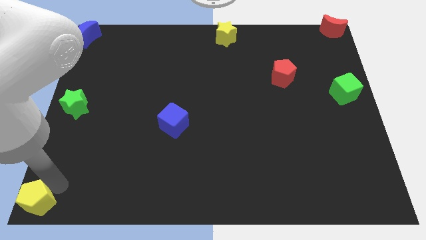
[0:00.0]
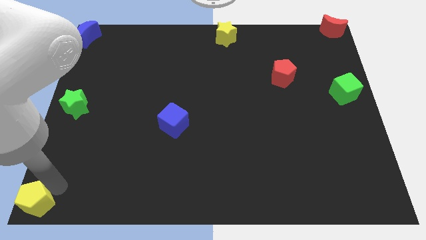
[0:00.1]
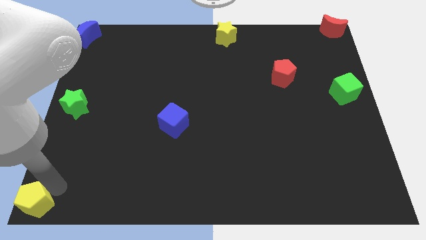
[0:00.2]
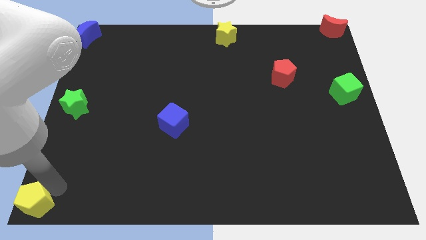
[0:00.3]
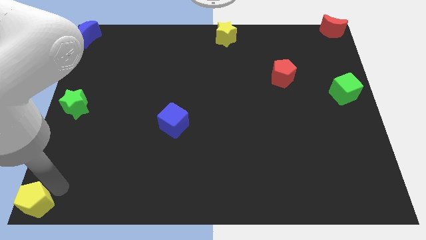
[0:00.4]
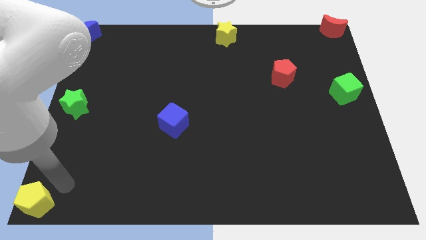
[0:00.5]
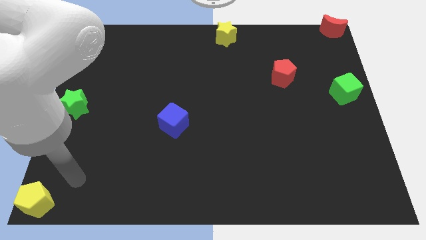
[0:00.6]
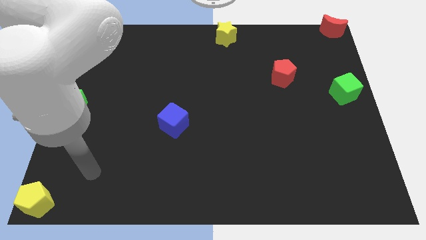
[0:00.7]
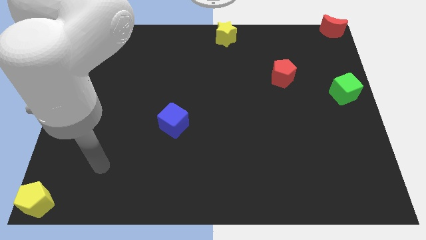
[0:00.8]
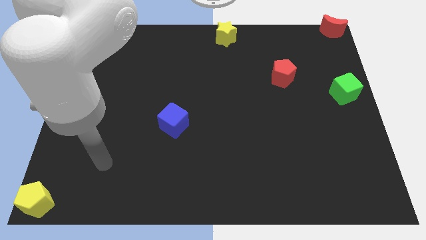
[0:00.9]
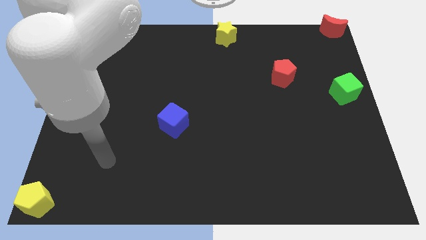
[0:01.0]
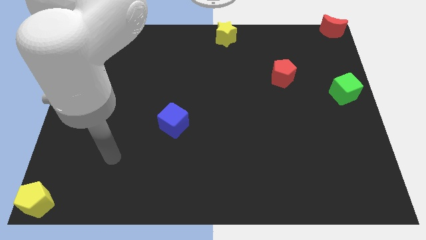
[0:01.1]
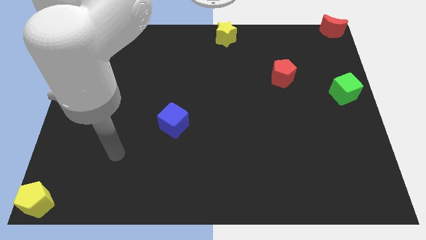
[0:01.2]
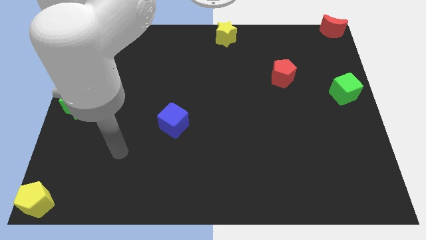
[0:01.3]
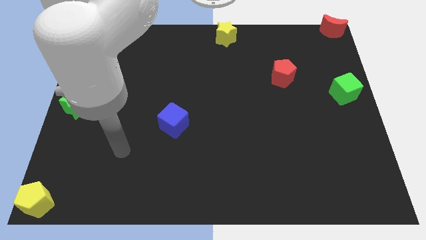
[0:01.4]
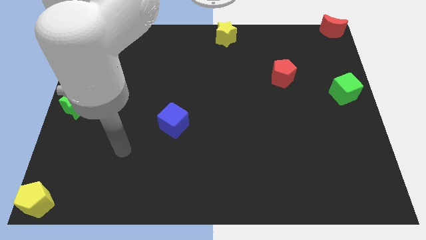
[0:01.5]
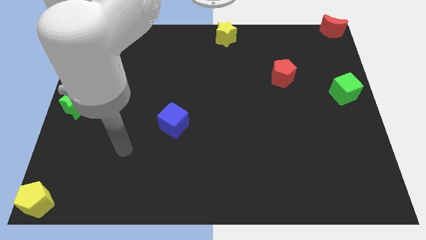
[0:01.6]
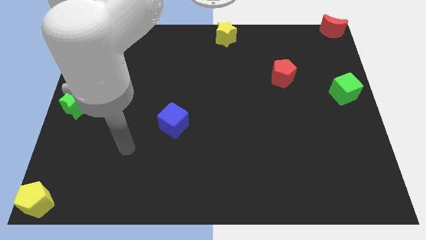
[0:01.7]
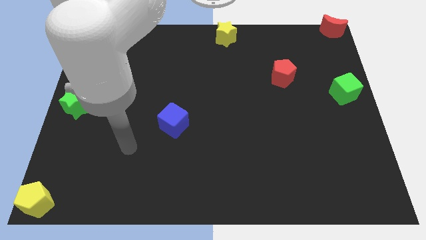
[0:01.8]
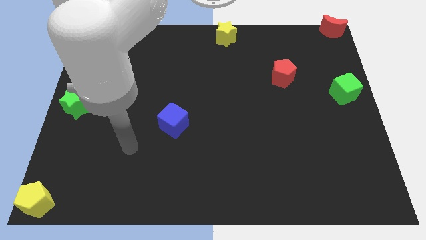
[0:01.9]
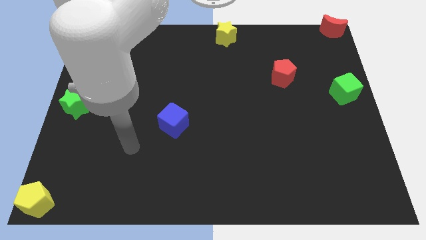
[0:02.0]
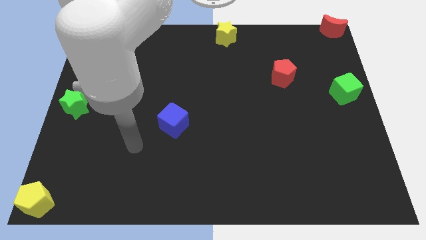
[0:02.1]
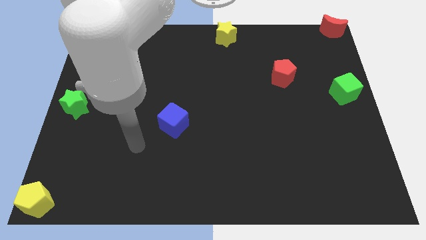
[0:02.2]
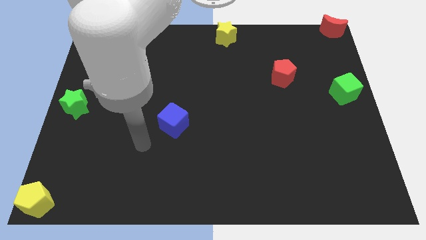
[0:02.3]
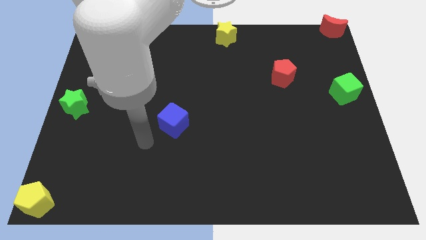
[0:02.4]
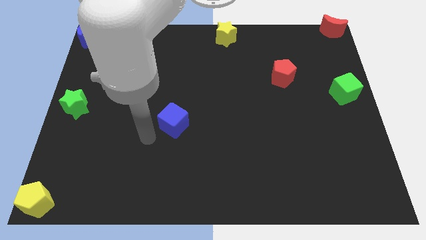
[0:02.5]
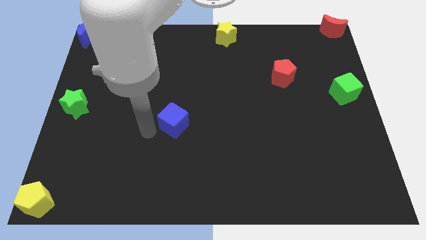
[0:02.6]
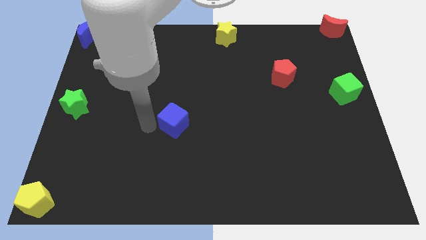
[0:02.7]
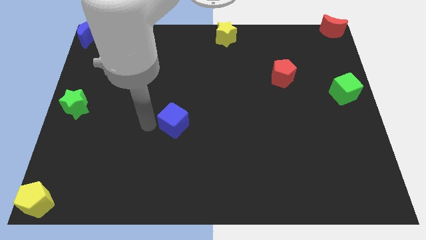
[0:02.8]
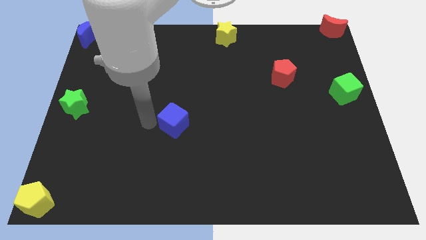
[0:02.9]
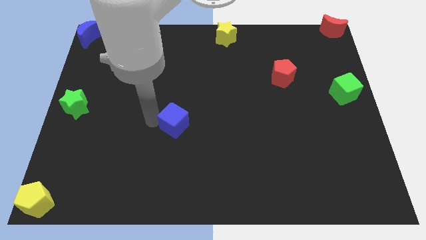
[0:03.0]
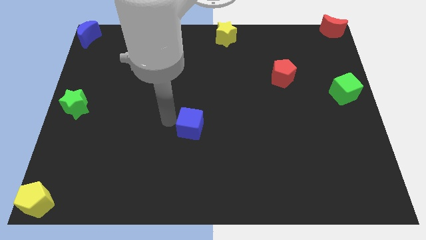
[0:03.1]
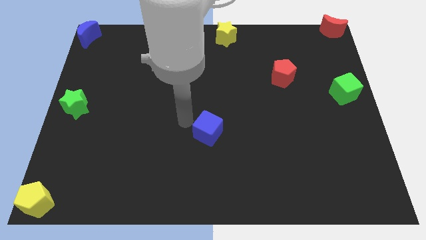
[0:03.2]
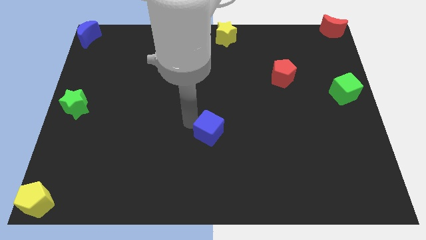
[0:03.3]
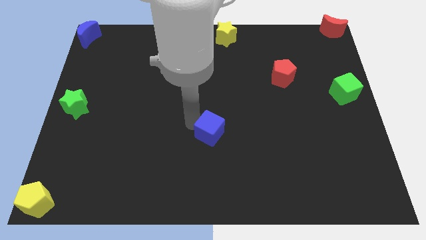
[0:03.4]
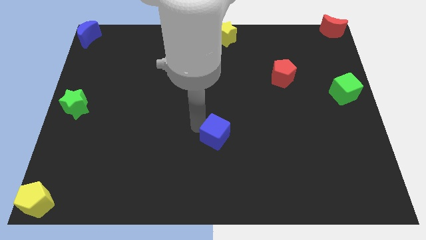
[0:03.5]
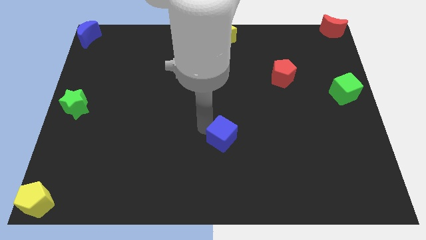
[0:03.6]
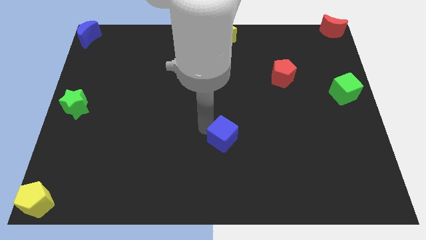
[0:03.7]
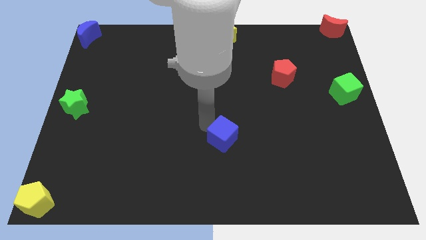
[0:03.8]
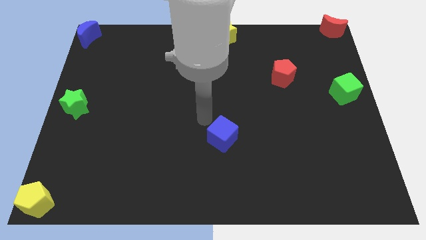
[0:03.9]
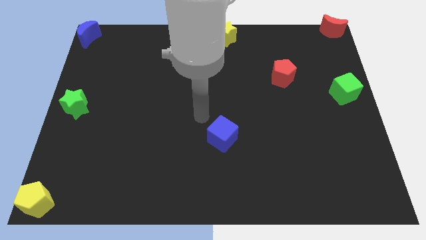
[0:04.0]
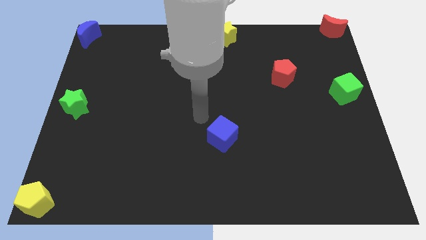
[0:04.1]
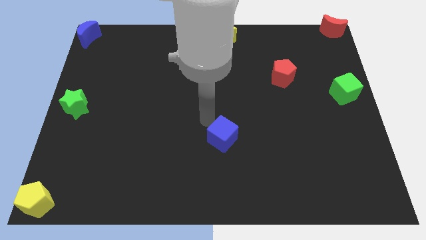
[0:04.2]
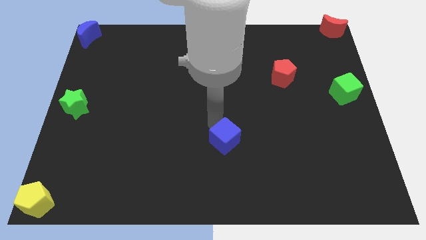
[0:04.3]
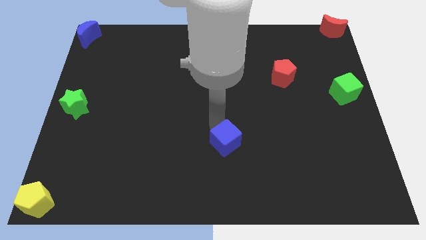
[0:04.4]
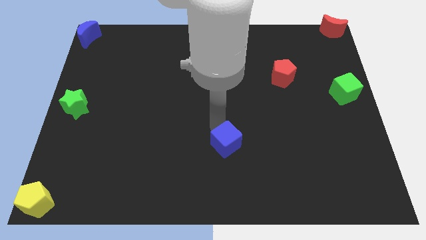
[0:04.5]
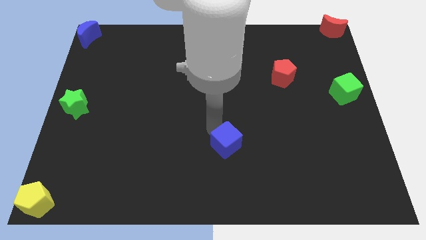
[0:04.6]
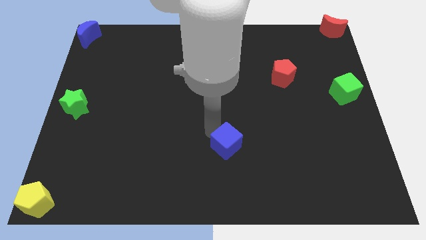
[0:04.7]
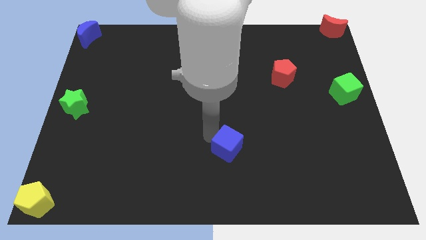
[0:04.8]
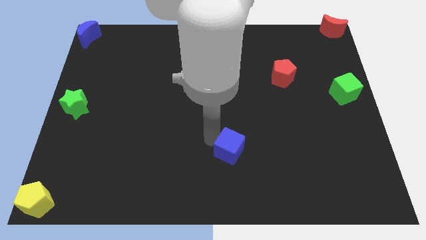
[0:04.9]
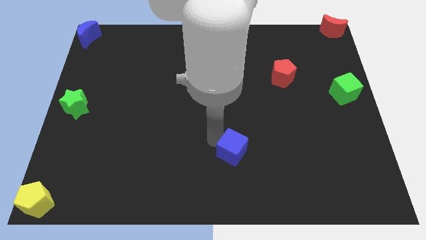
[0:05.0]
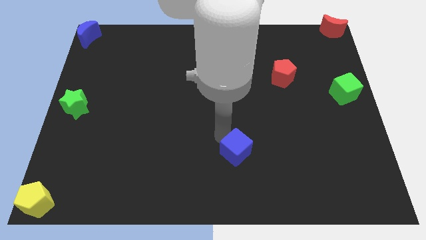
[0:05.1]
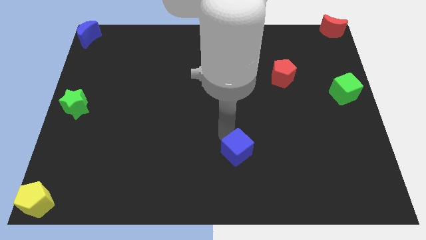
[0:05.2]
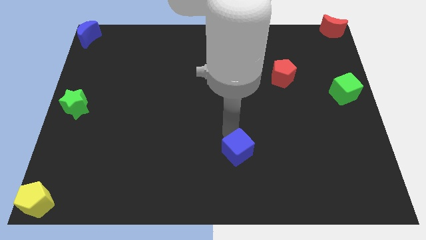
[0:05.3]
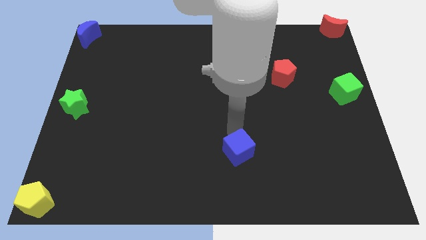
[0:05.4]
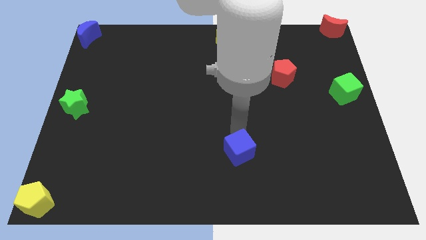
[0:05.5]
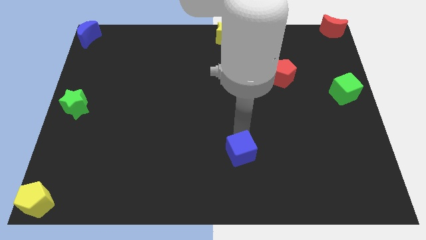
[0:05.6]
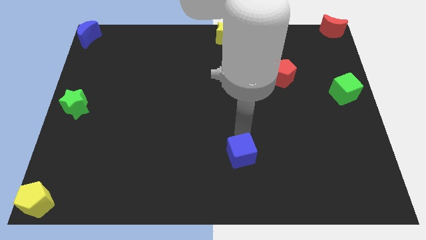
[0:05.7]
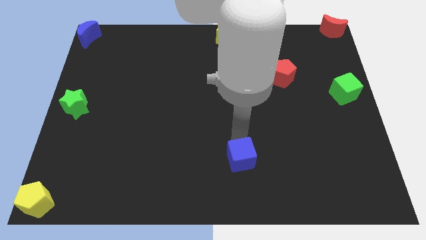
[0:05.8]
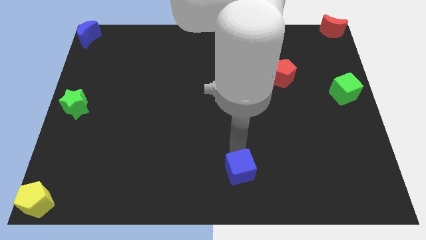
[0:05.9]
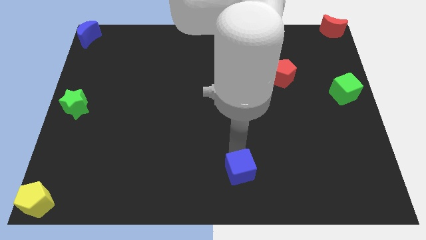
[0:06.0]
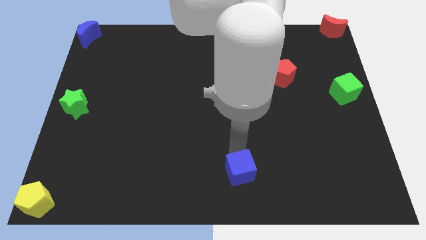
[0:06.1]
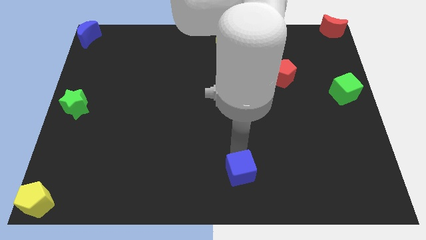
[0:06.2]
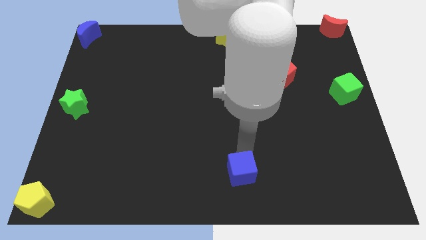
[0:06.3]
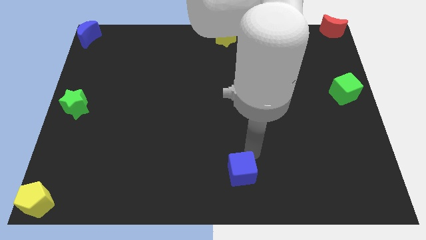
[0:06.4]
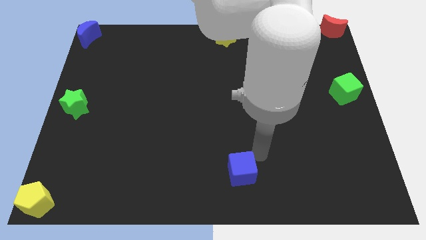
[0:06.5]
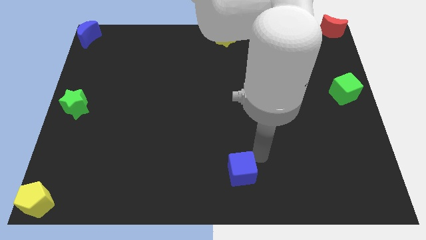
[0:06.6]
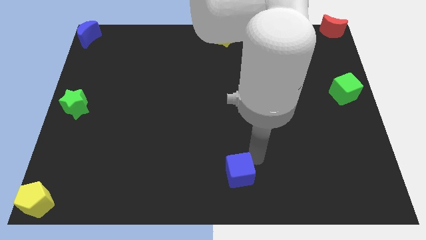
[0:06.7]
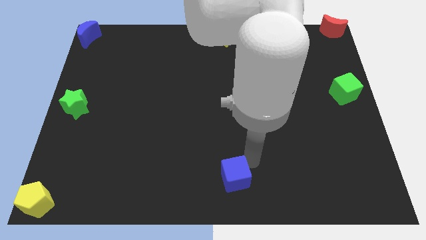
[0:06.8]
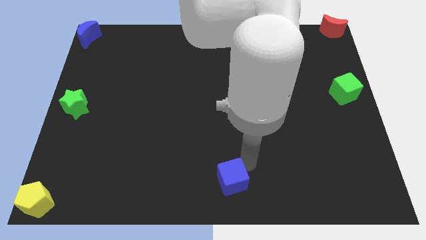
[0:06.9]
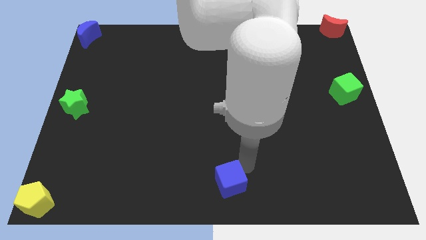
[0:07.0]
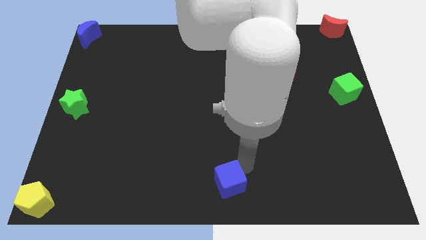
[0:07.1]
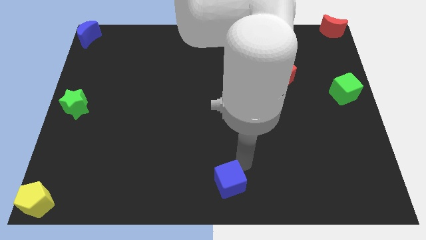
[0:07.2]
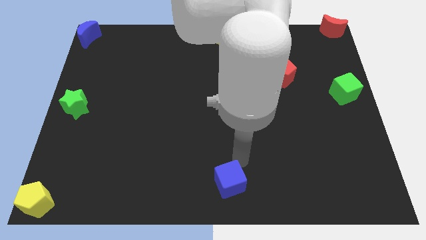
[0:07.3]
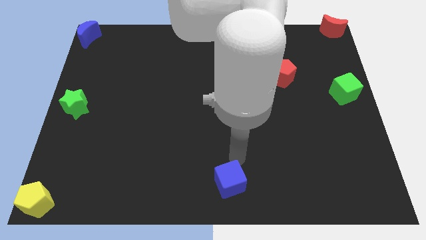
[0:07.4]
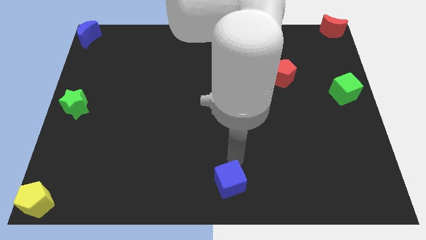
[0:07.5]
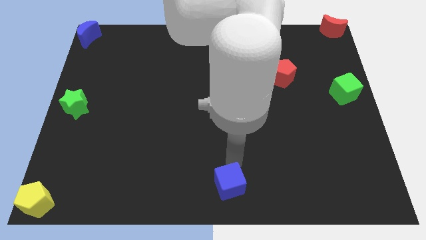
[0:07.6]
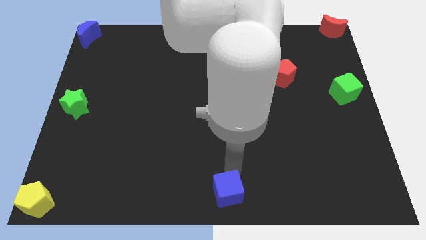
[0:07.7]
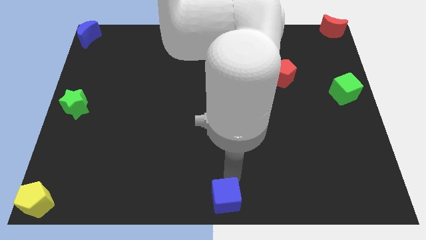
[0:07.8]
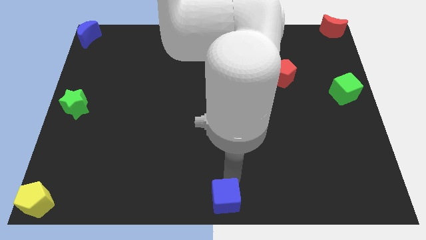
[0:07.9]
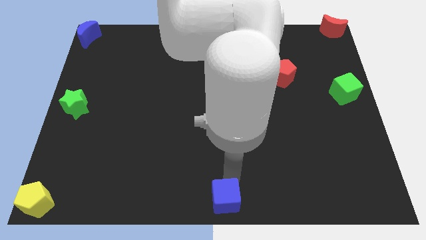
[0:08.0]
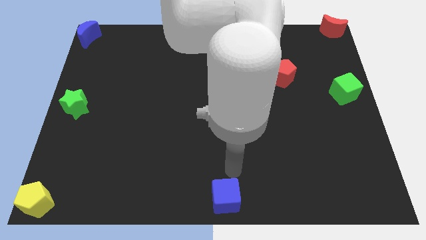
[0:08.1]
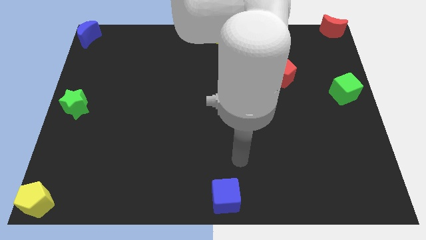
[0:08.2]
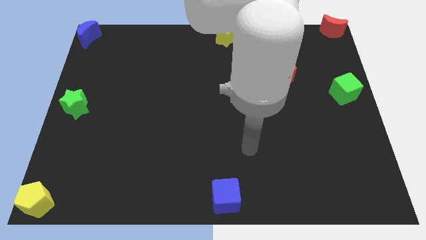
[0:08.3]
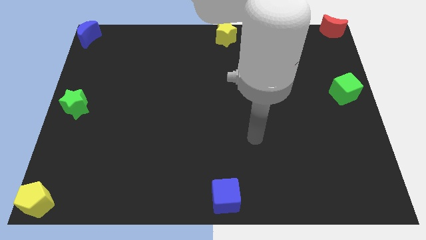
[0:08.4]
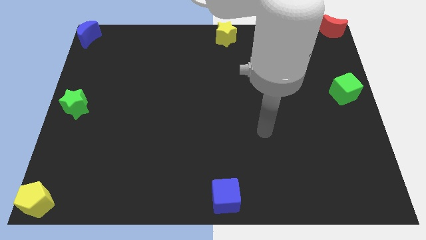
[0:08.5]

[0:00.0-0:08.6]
move the blue cube to the bottom center of the board

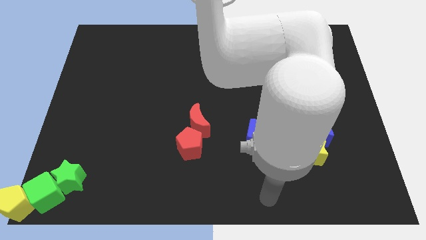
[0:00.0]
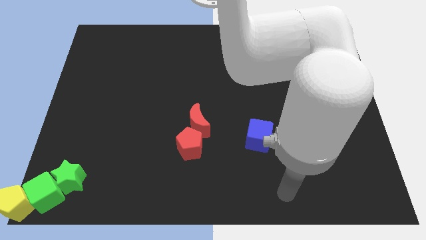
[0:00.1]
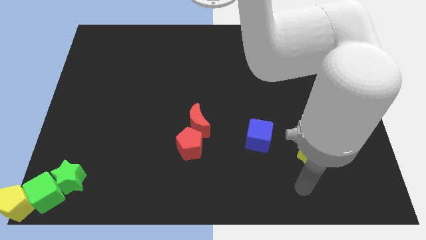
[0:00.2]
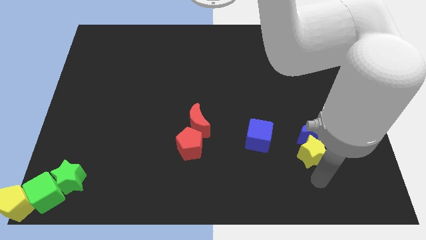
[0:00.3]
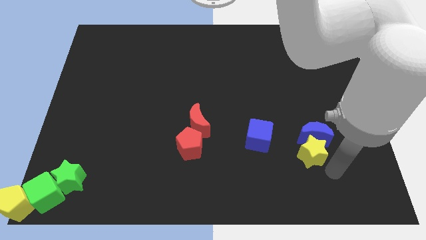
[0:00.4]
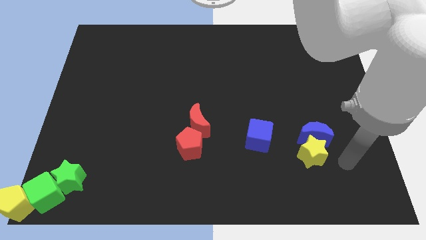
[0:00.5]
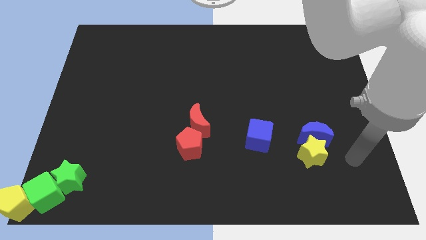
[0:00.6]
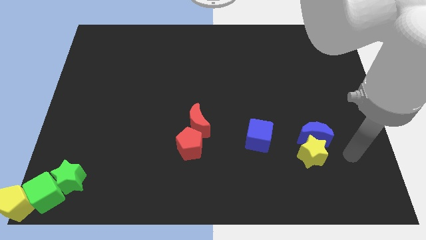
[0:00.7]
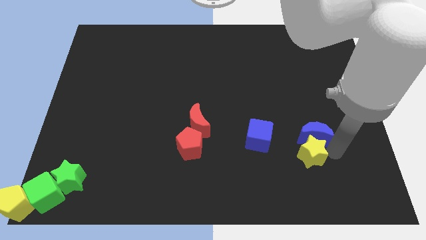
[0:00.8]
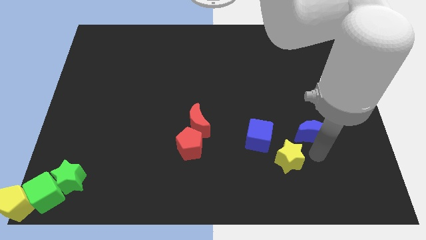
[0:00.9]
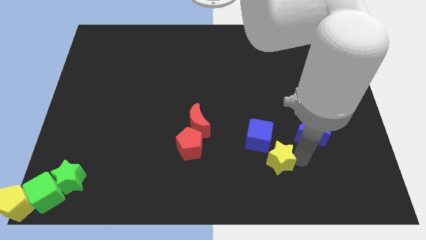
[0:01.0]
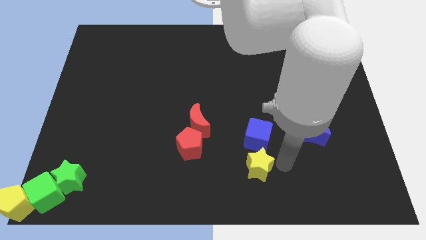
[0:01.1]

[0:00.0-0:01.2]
place yellow star down to the blue cube
